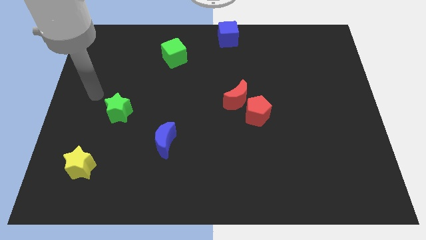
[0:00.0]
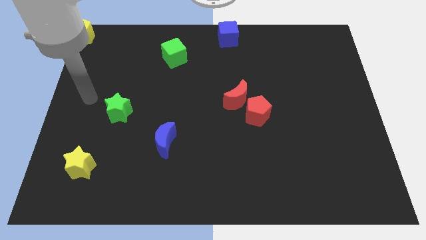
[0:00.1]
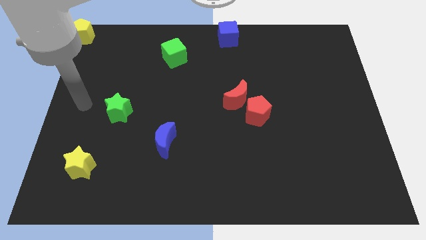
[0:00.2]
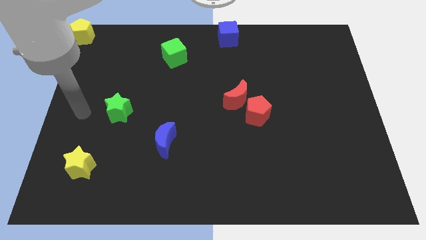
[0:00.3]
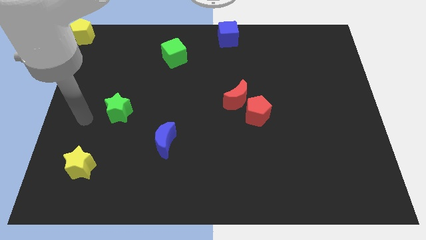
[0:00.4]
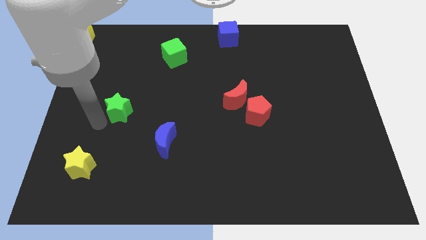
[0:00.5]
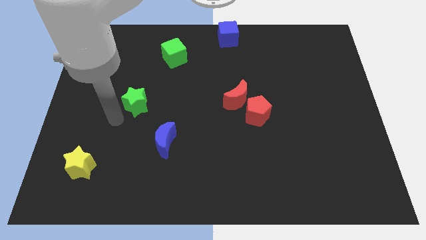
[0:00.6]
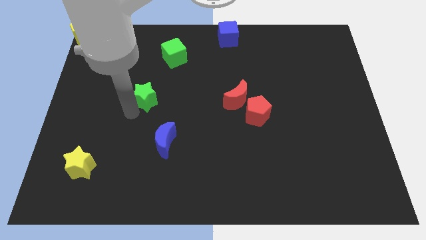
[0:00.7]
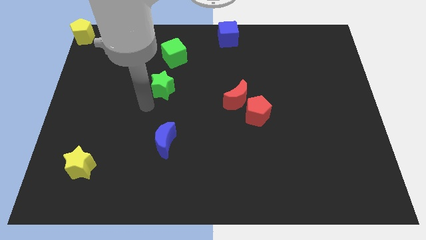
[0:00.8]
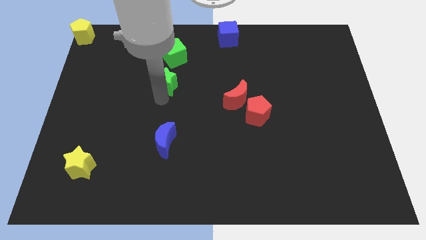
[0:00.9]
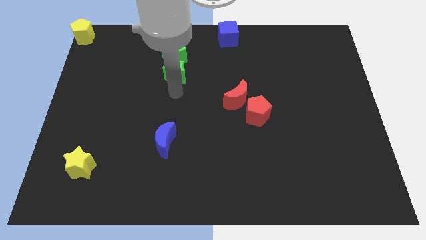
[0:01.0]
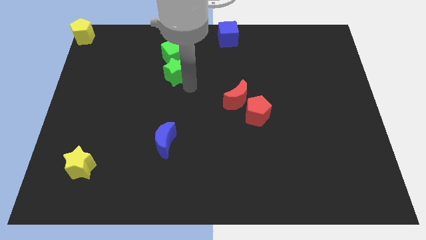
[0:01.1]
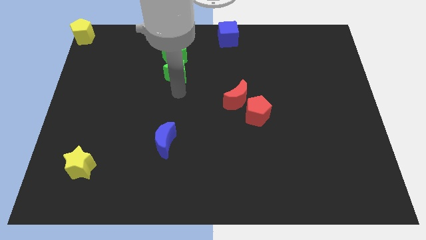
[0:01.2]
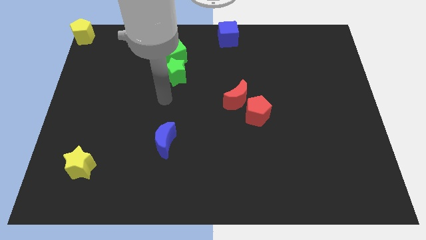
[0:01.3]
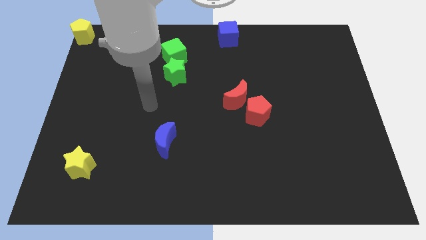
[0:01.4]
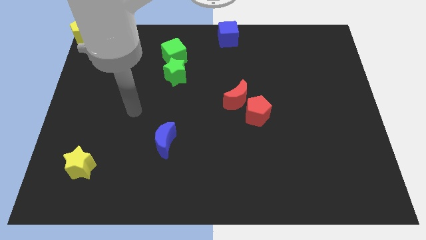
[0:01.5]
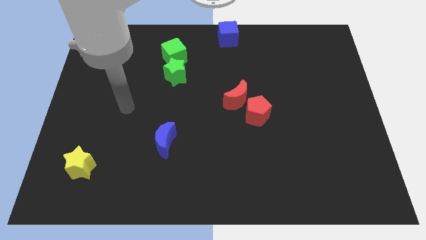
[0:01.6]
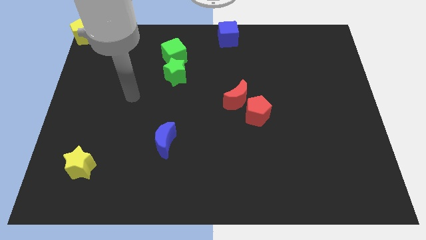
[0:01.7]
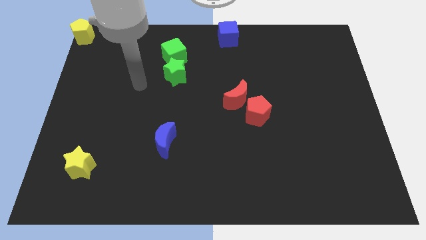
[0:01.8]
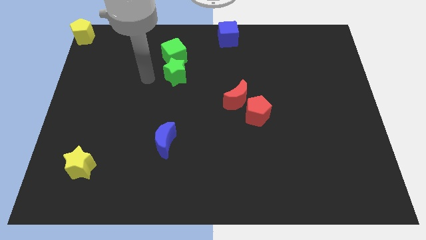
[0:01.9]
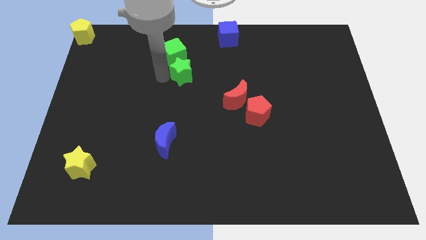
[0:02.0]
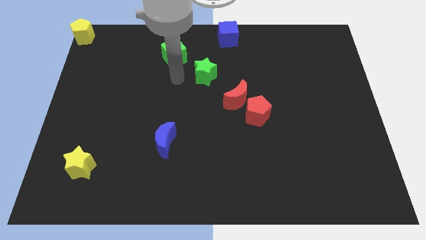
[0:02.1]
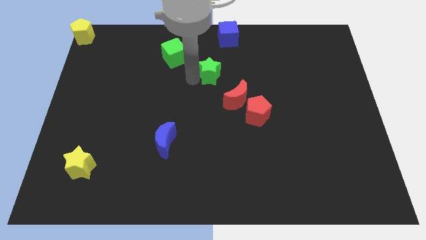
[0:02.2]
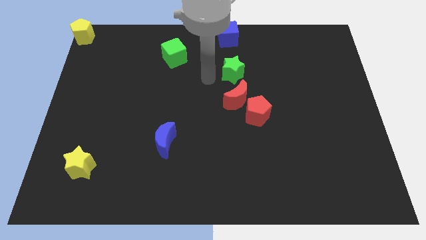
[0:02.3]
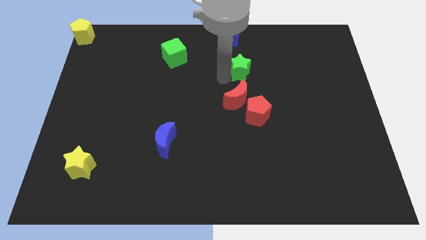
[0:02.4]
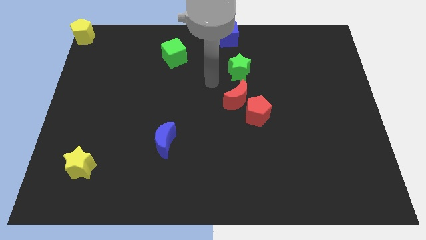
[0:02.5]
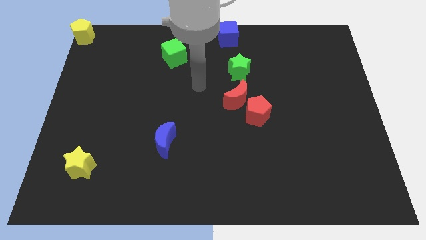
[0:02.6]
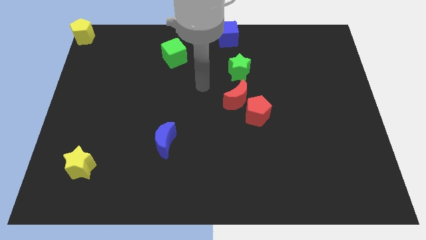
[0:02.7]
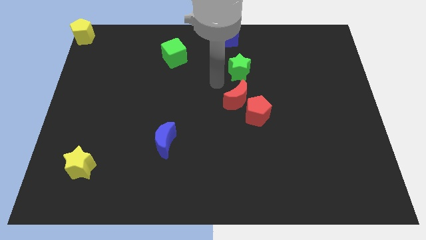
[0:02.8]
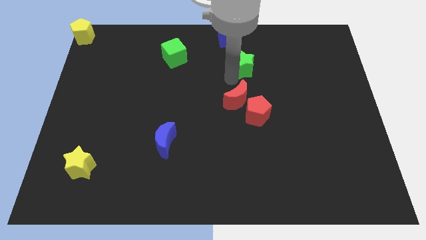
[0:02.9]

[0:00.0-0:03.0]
push green star above the red crescent

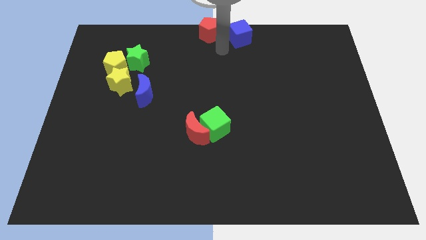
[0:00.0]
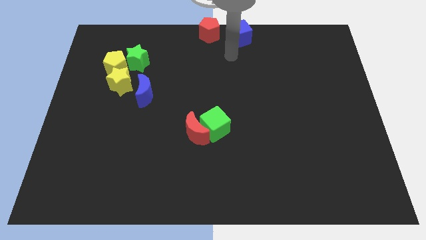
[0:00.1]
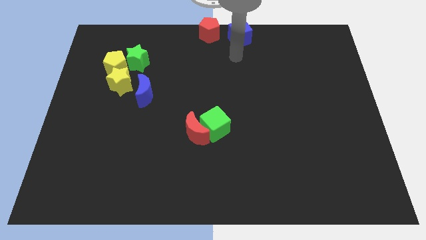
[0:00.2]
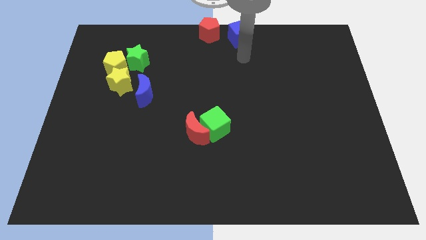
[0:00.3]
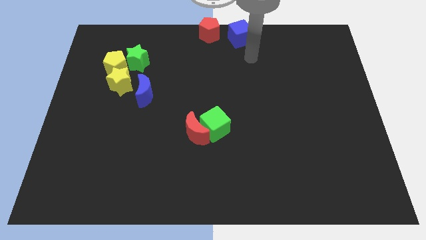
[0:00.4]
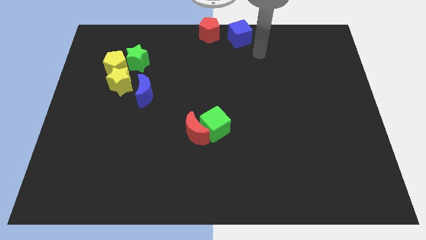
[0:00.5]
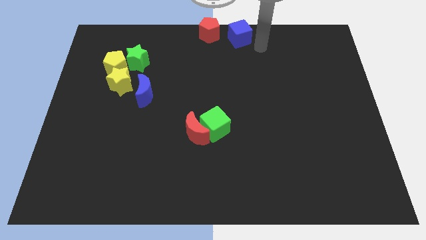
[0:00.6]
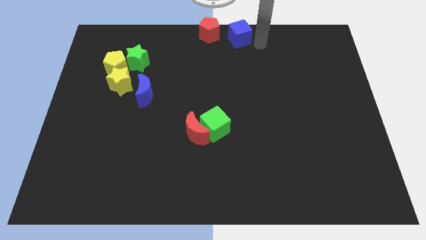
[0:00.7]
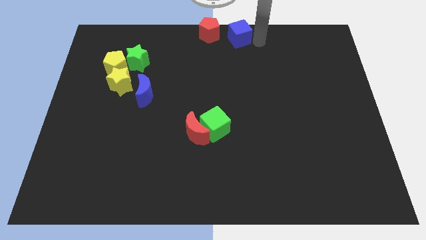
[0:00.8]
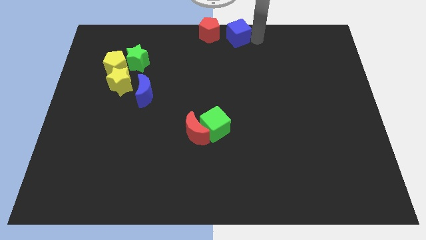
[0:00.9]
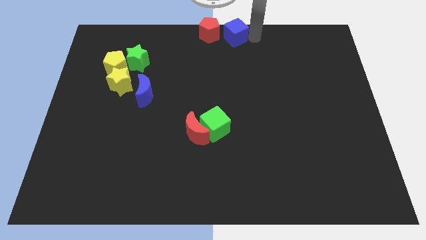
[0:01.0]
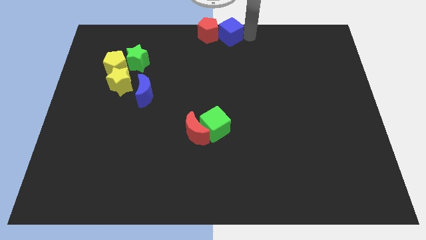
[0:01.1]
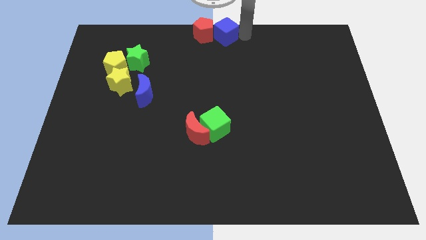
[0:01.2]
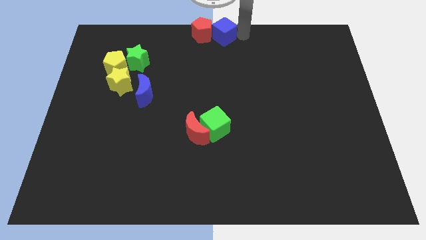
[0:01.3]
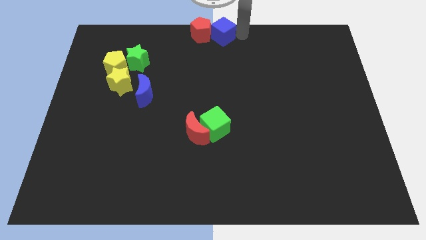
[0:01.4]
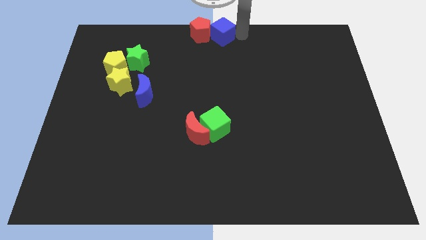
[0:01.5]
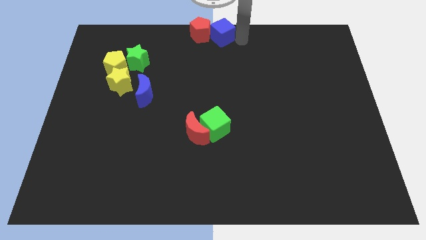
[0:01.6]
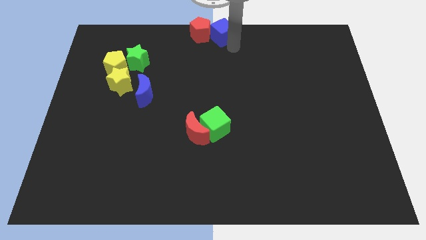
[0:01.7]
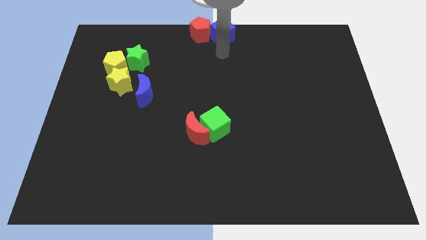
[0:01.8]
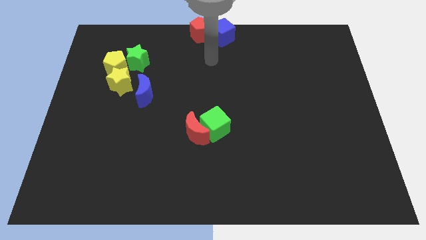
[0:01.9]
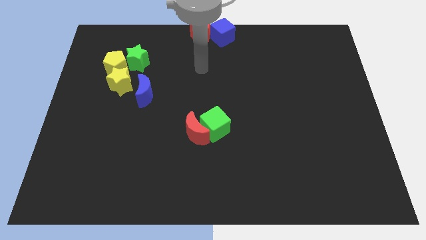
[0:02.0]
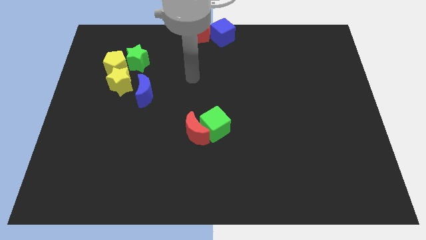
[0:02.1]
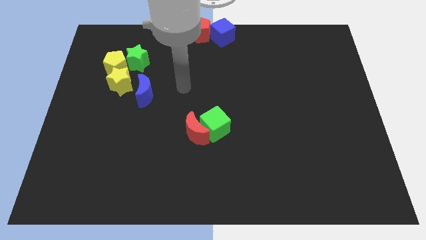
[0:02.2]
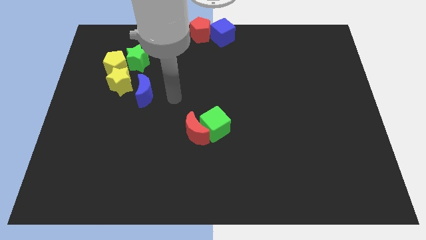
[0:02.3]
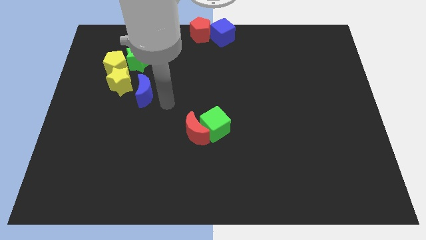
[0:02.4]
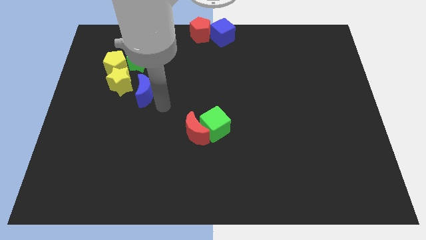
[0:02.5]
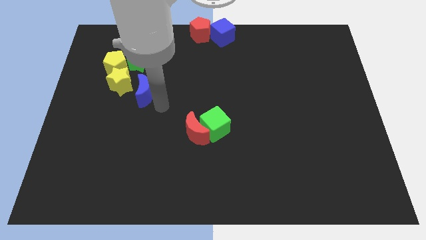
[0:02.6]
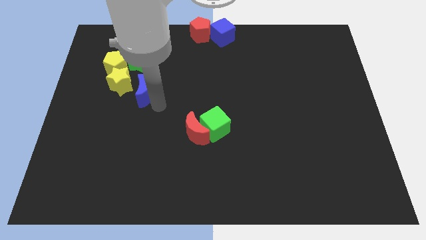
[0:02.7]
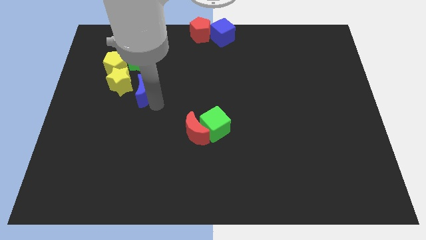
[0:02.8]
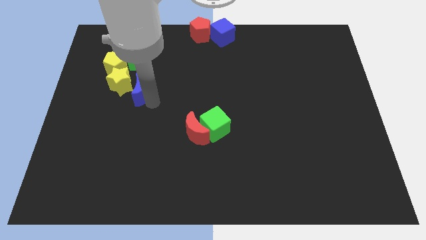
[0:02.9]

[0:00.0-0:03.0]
push the blue cube into red pentagon

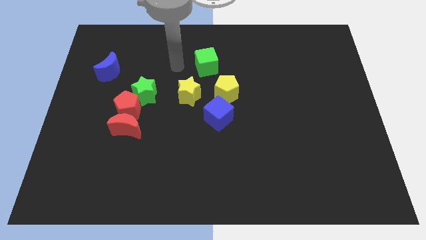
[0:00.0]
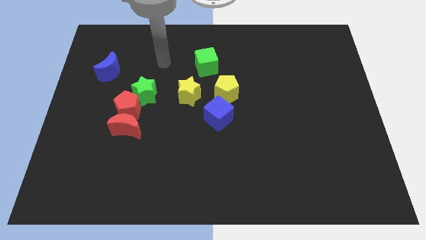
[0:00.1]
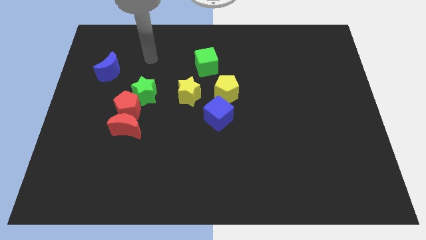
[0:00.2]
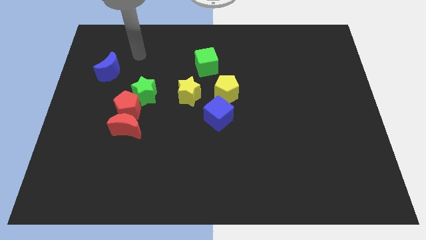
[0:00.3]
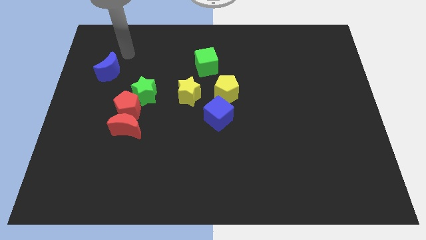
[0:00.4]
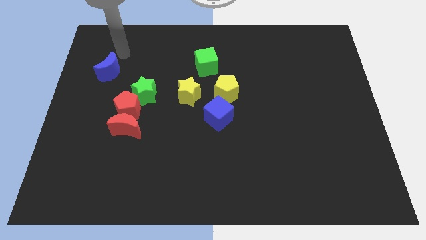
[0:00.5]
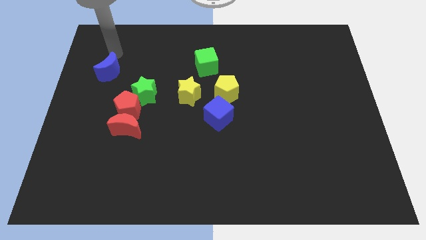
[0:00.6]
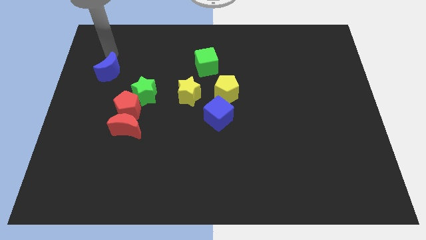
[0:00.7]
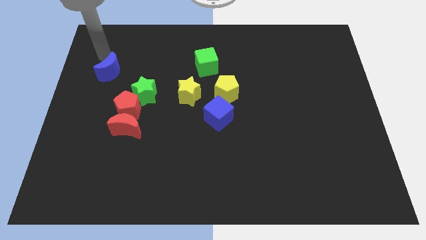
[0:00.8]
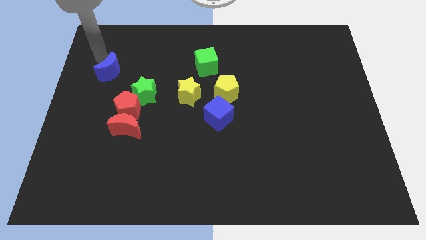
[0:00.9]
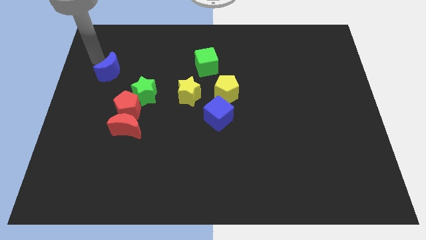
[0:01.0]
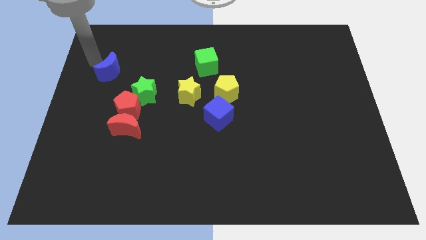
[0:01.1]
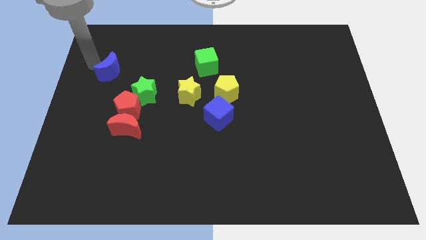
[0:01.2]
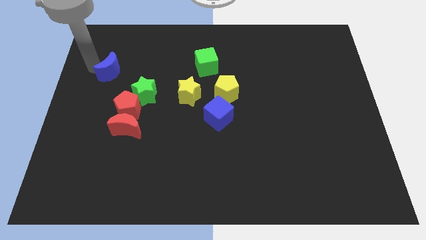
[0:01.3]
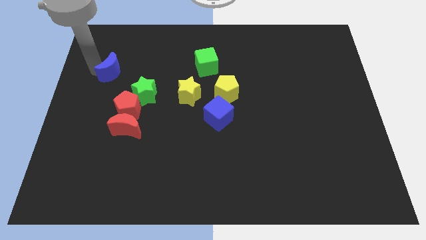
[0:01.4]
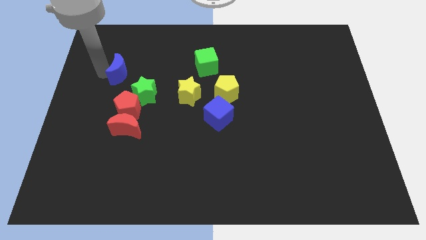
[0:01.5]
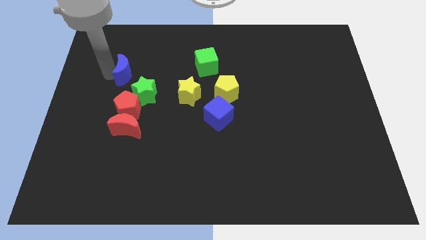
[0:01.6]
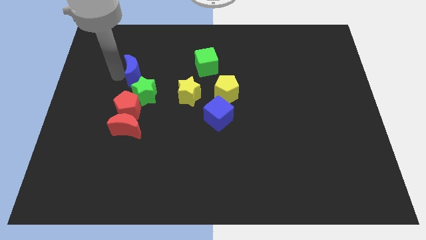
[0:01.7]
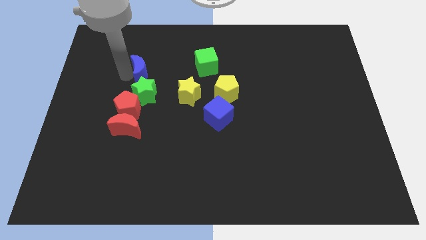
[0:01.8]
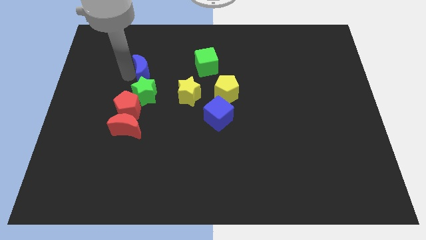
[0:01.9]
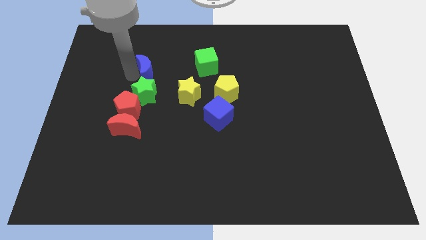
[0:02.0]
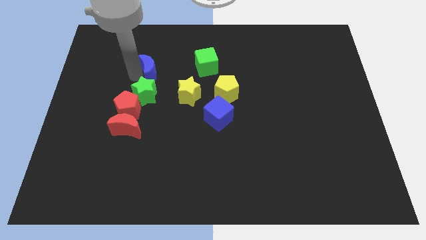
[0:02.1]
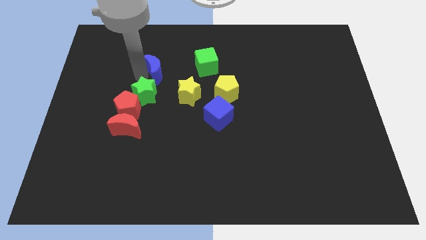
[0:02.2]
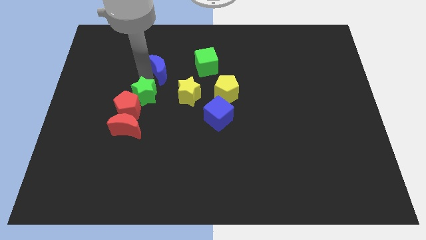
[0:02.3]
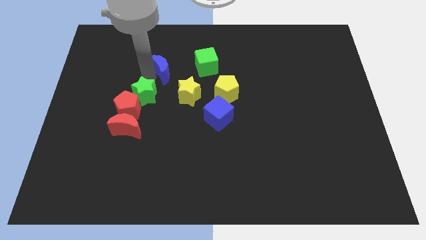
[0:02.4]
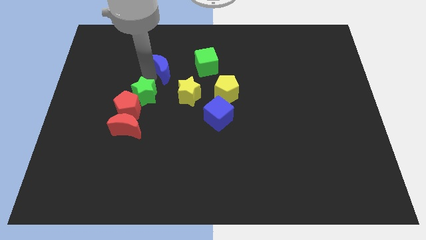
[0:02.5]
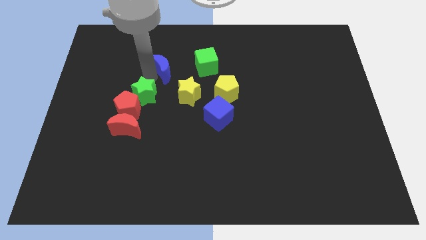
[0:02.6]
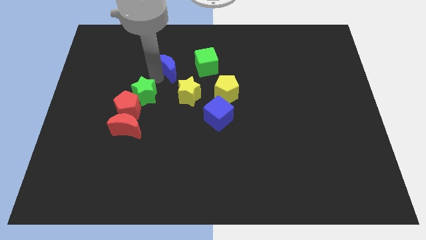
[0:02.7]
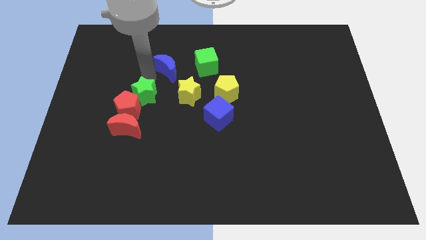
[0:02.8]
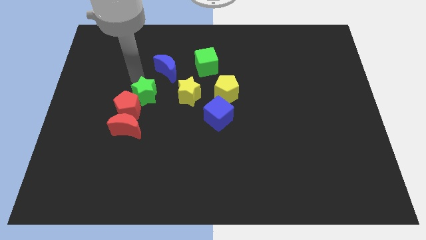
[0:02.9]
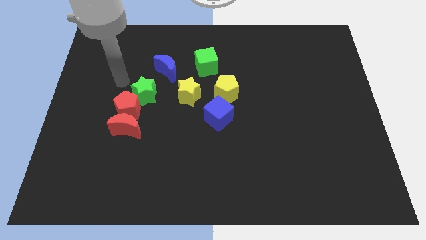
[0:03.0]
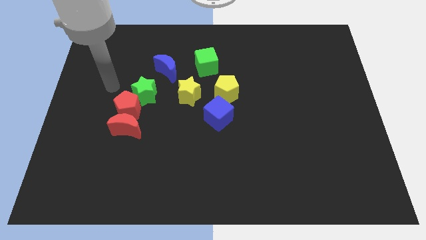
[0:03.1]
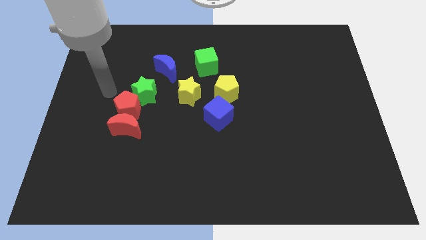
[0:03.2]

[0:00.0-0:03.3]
push the blue crescent to the left side of green cube
